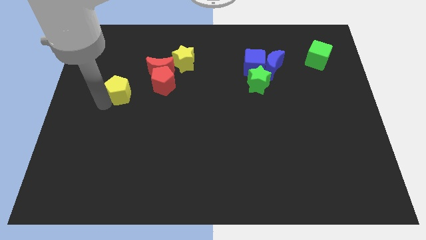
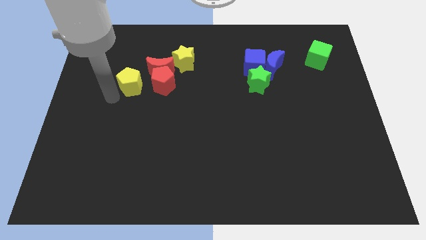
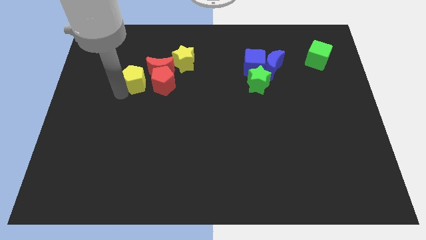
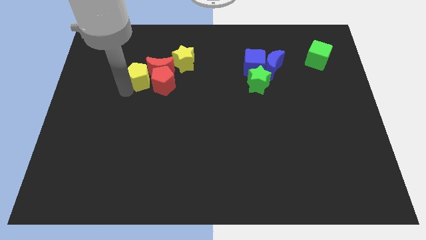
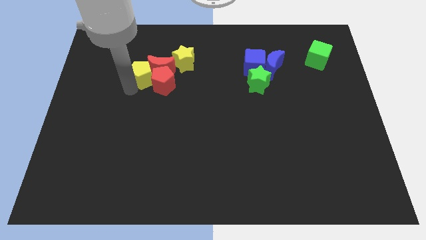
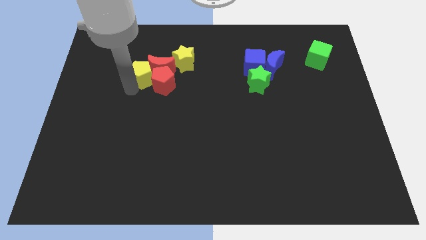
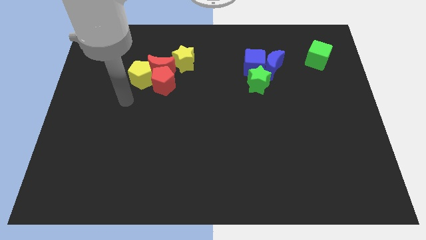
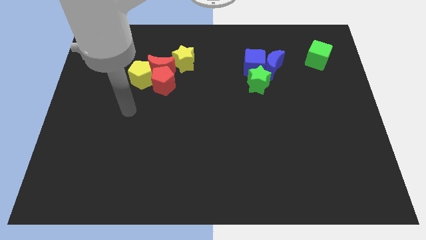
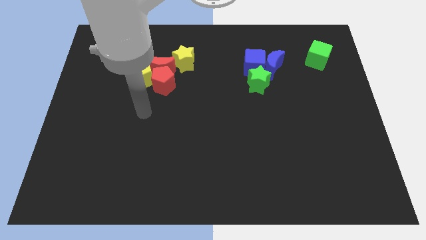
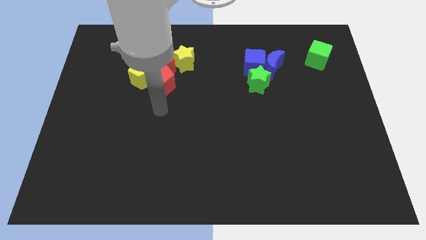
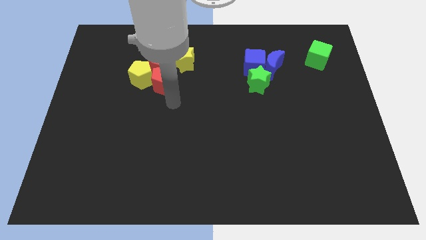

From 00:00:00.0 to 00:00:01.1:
add yellow pentagon into red blocks

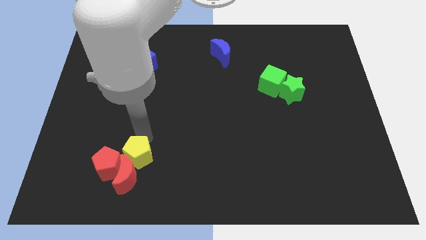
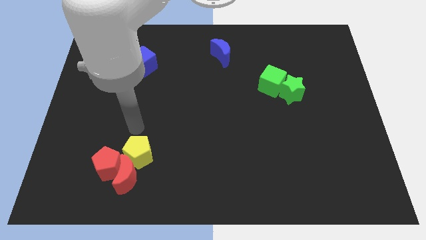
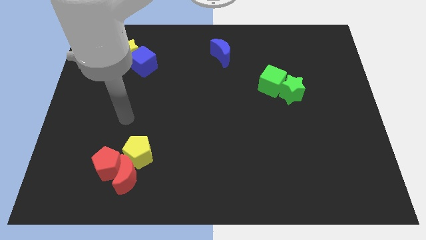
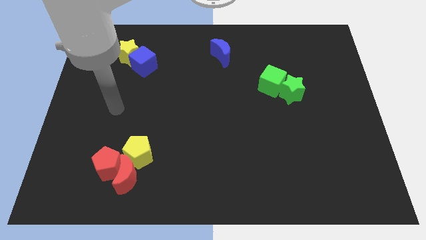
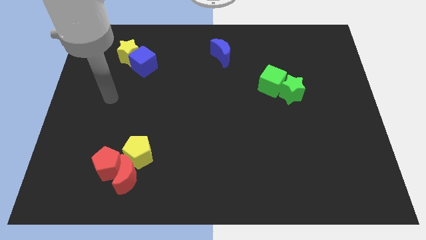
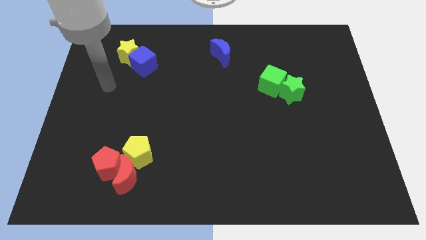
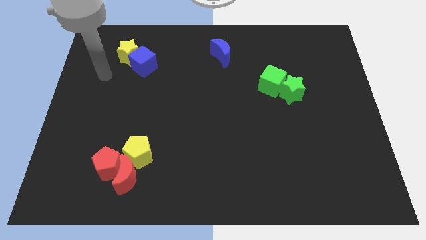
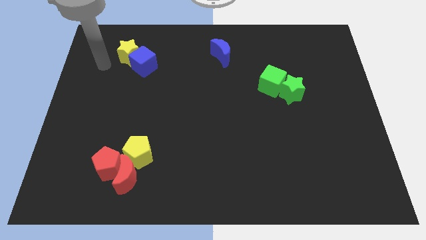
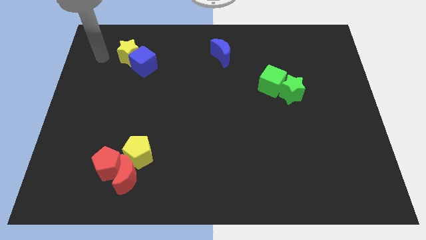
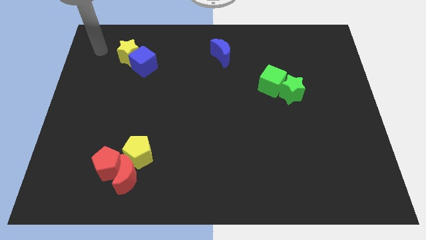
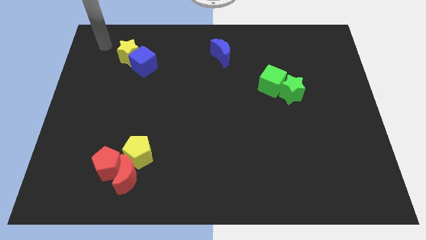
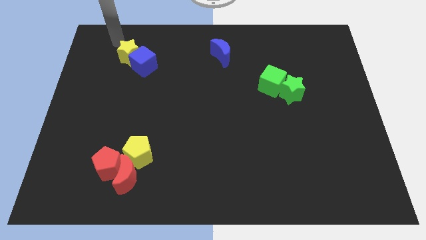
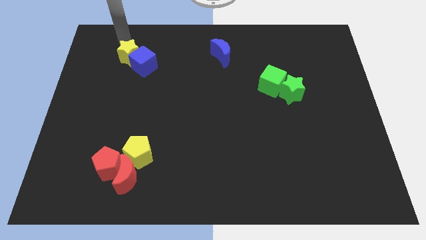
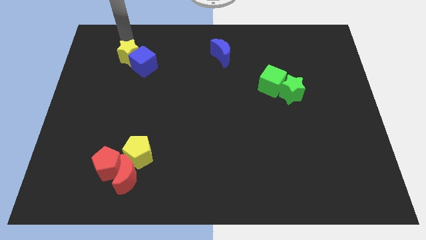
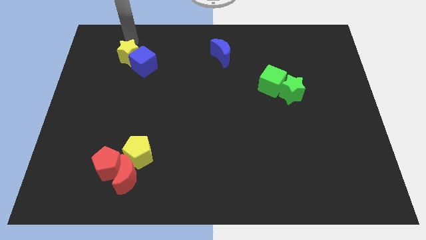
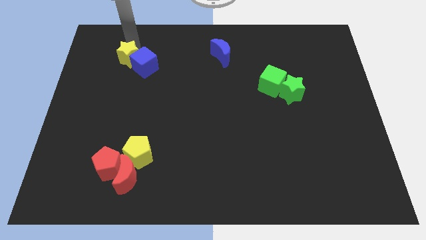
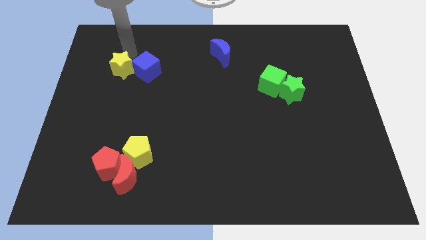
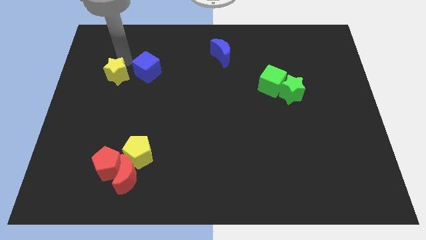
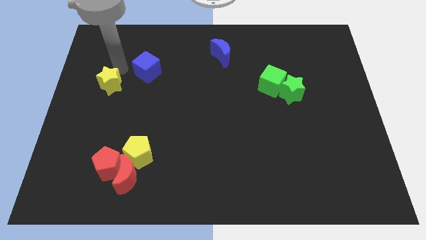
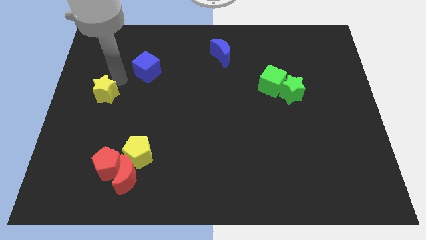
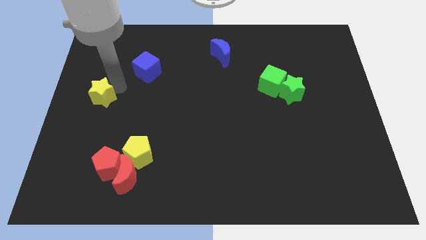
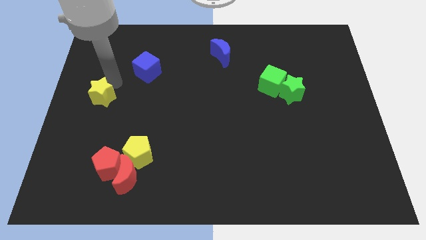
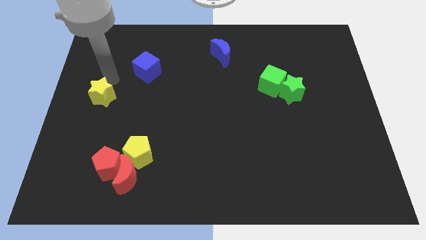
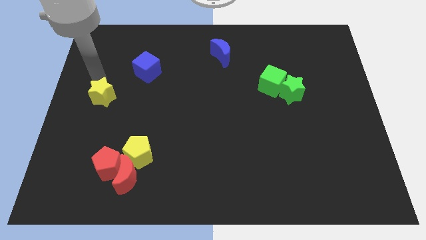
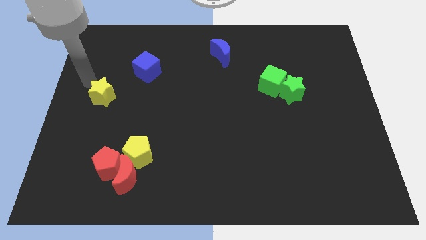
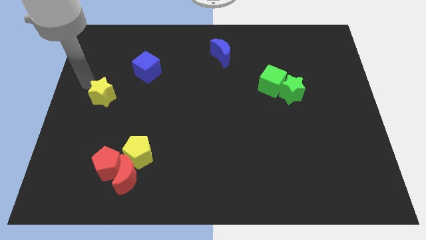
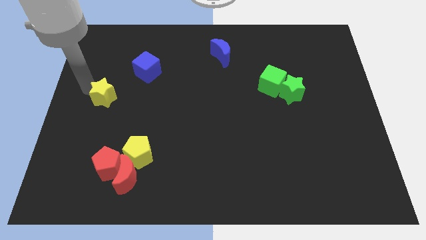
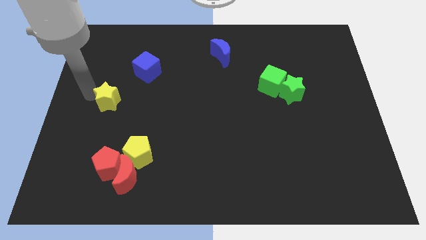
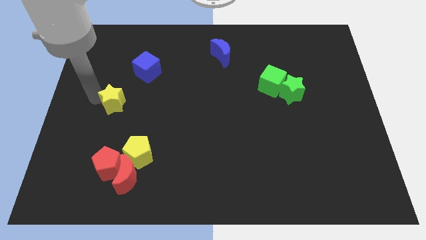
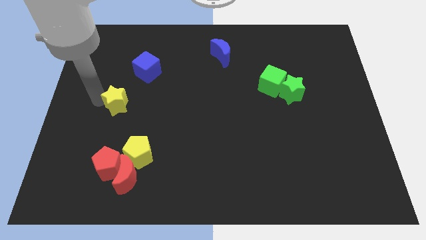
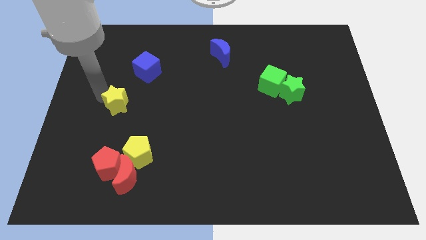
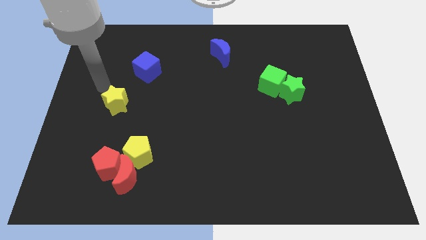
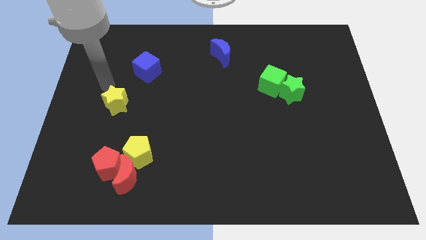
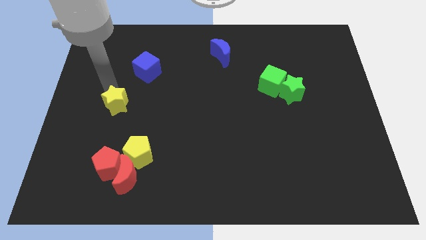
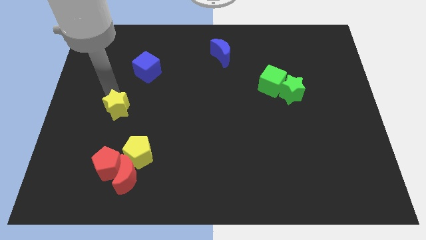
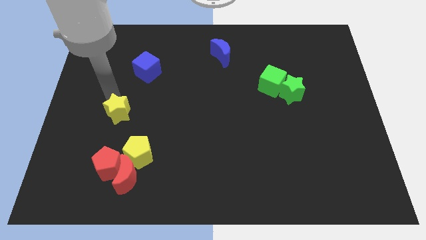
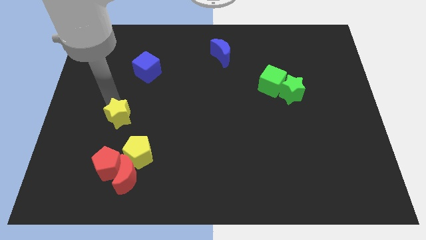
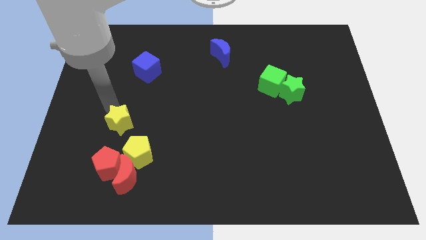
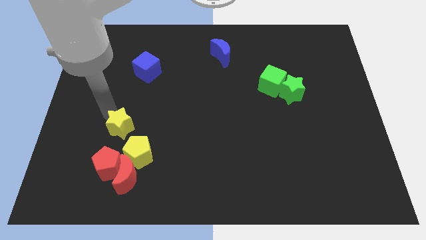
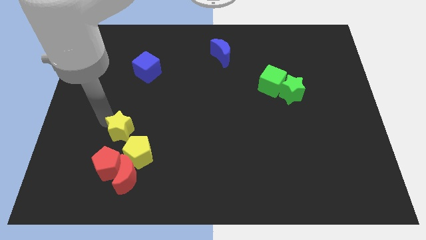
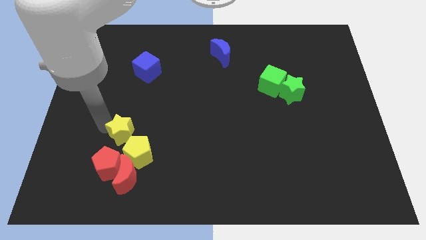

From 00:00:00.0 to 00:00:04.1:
move yellow star above the yellow pentagon

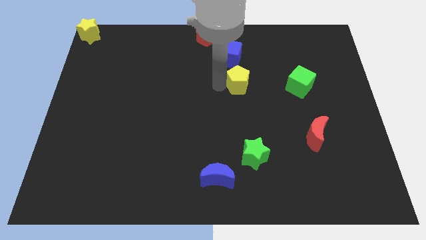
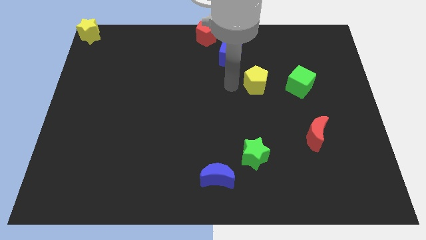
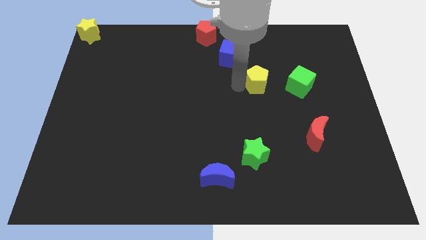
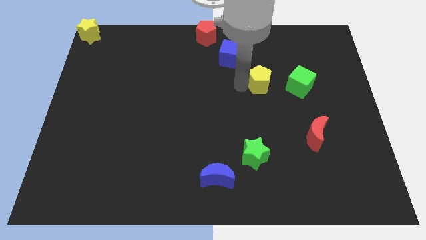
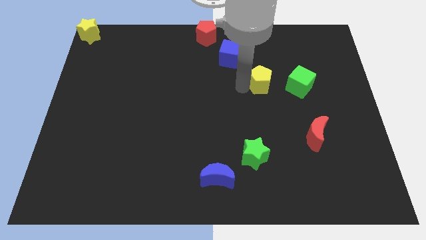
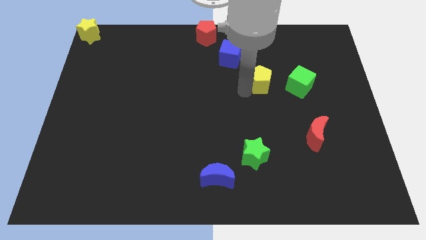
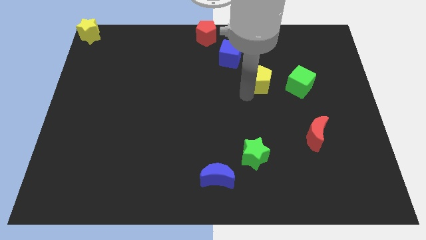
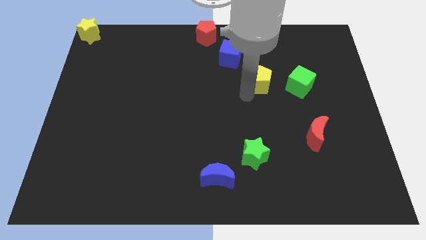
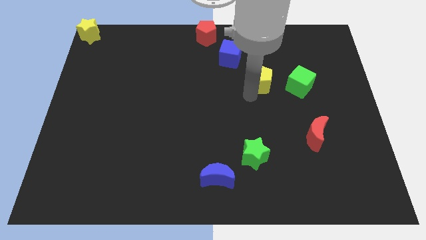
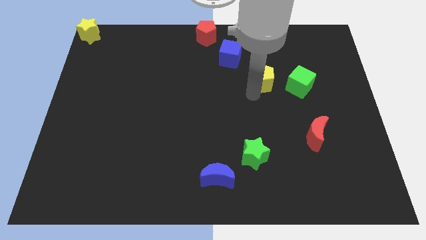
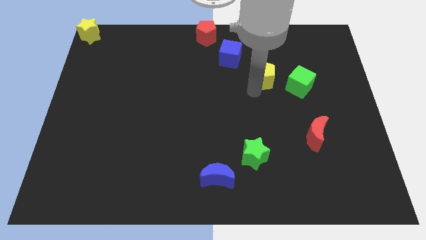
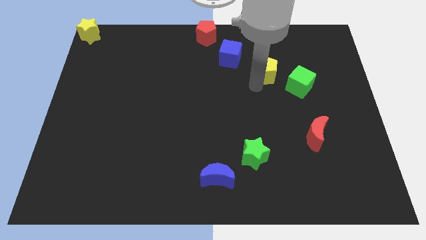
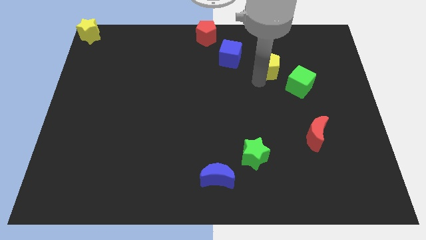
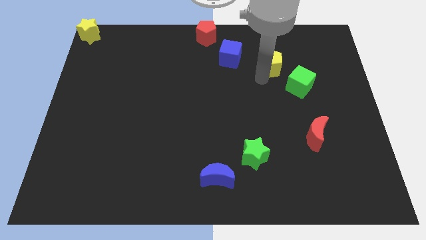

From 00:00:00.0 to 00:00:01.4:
place the yellow pentagon in between the green and blue cubes

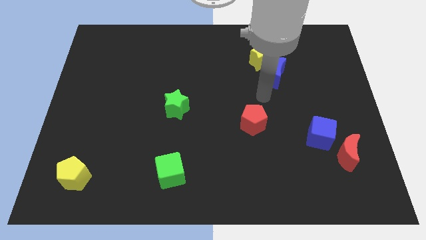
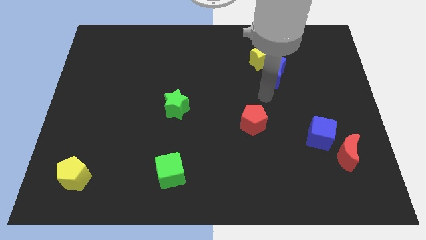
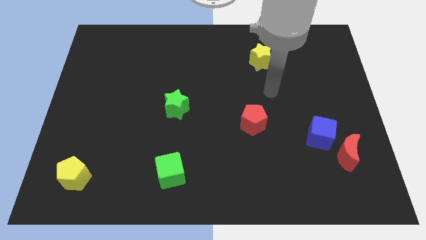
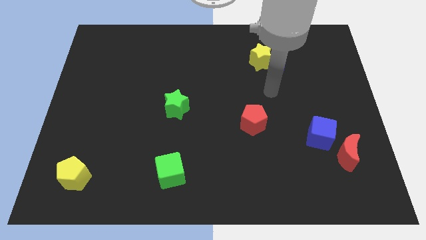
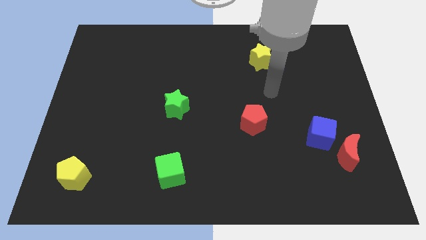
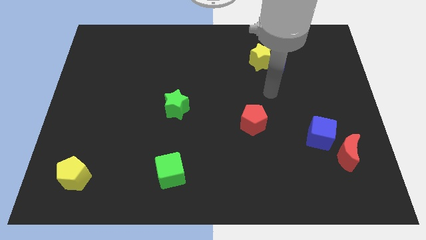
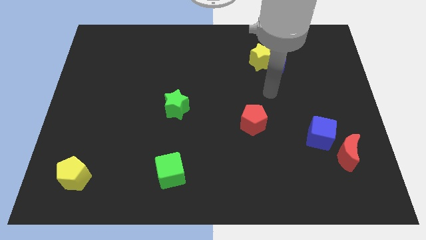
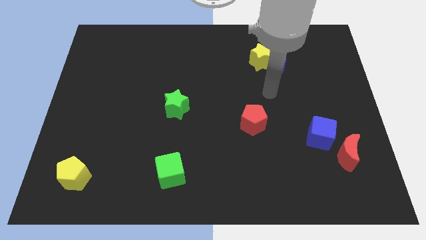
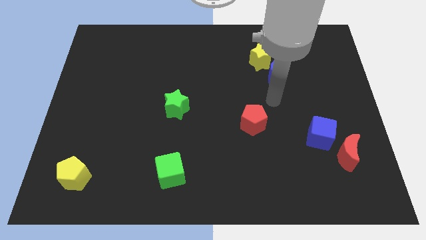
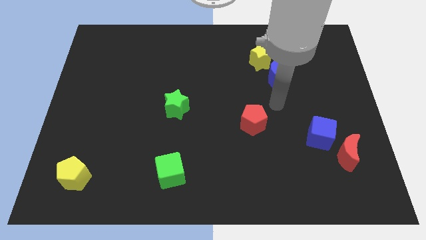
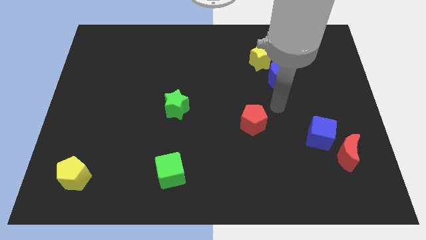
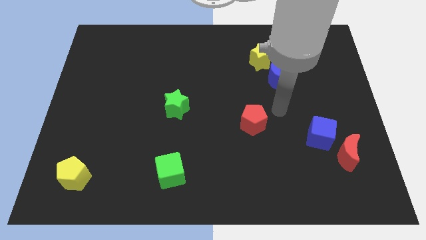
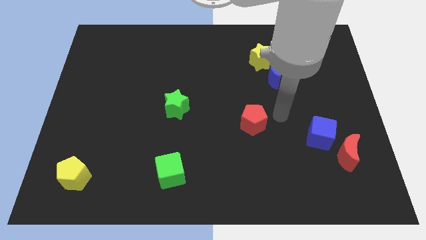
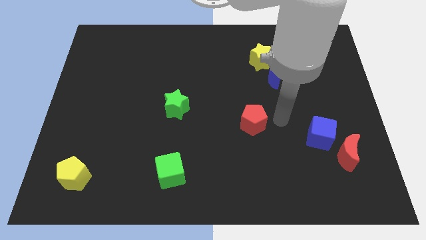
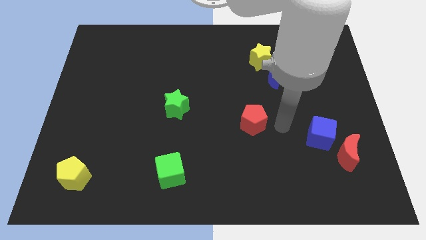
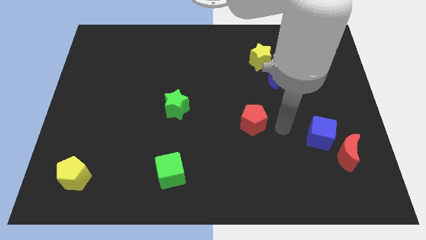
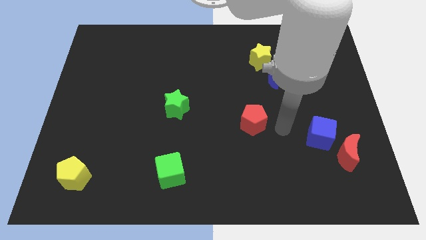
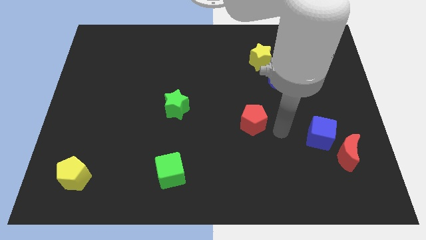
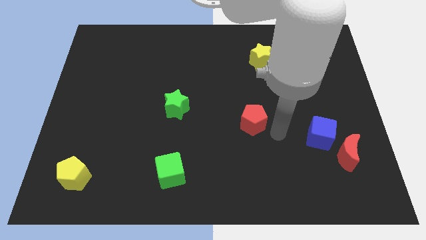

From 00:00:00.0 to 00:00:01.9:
move your arm to the right of red pentagon

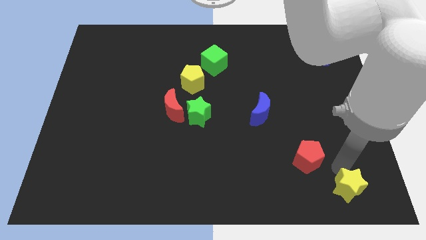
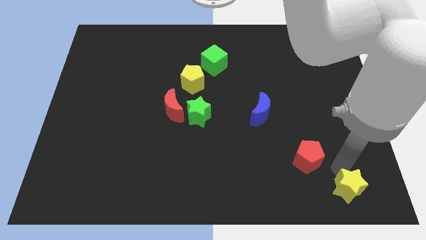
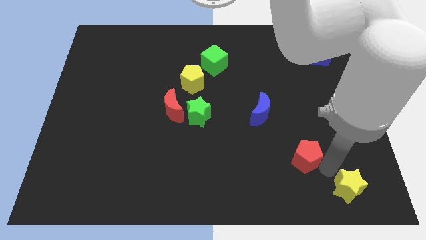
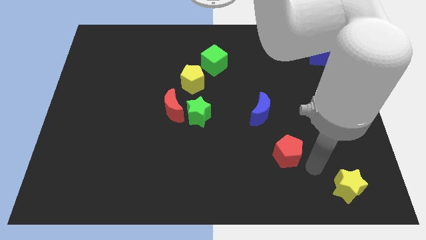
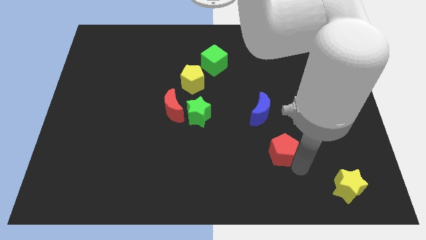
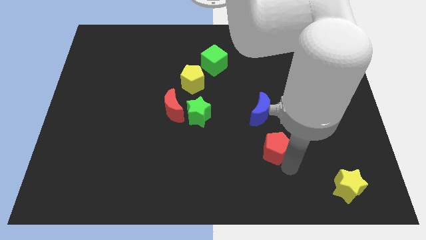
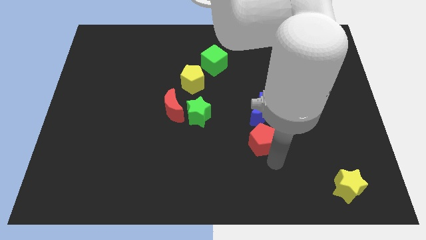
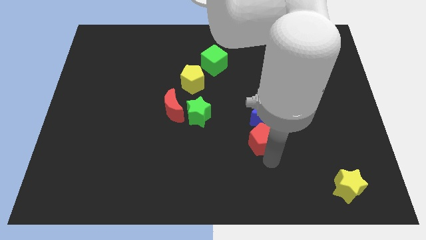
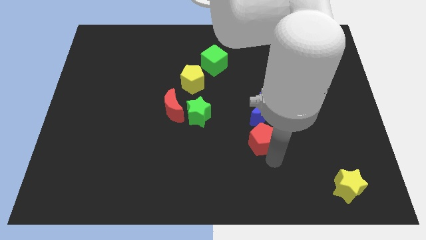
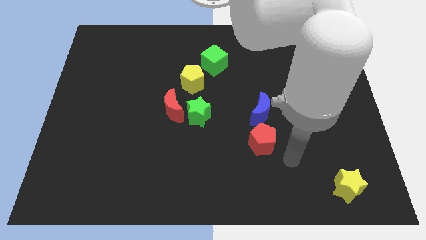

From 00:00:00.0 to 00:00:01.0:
place red pentagon below blue crescent
